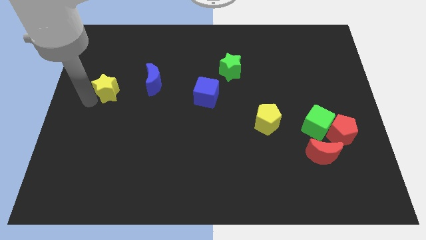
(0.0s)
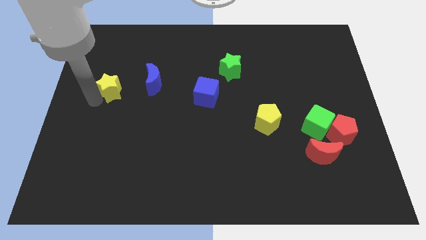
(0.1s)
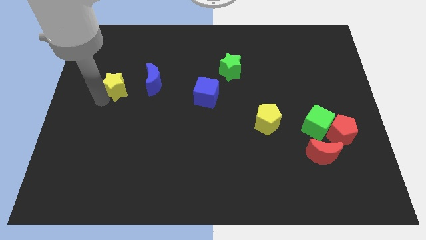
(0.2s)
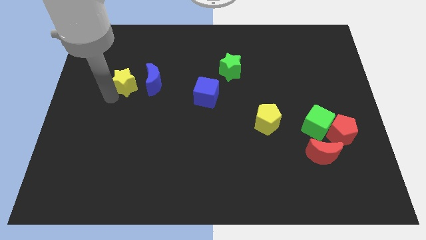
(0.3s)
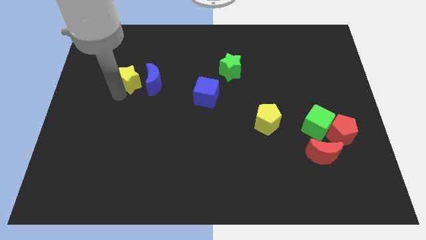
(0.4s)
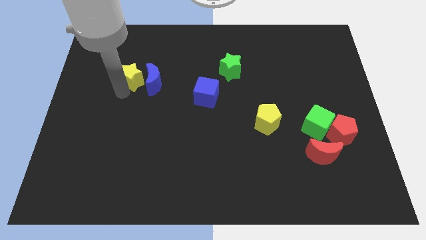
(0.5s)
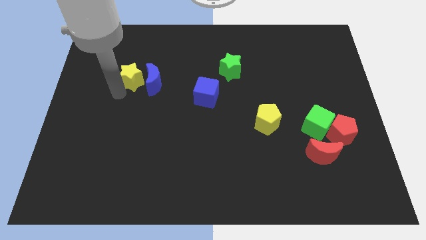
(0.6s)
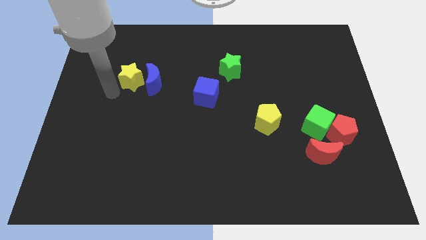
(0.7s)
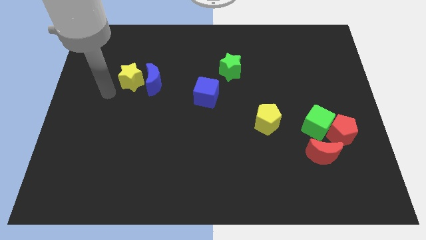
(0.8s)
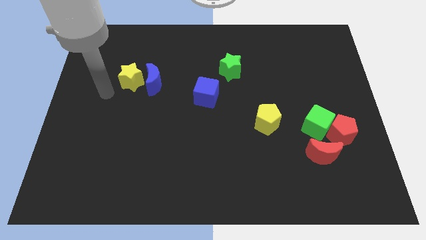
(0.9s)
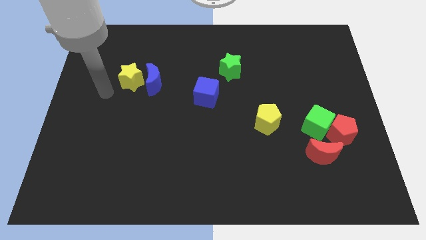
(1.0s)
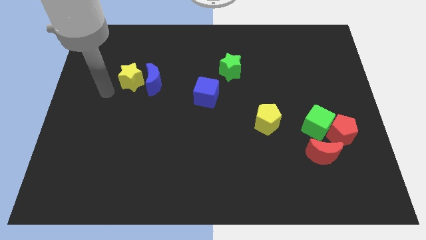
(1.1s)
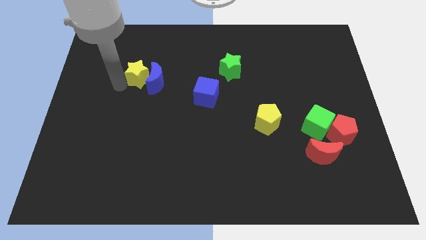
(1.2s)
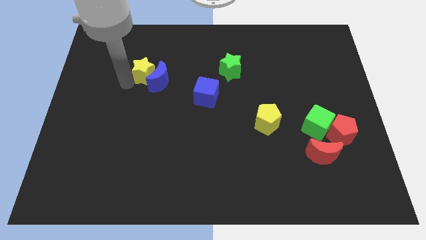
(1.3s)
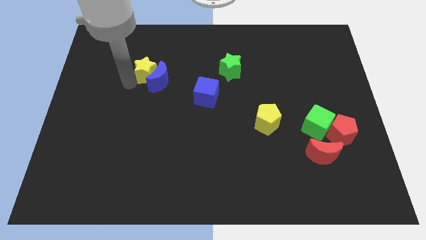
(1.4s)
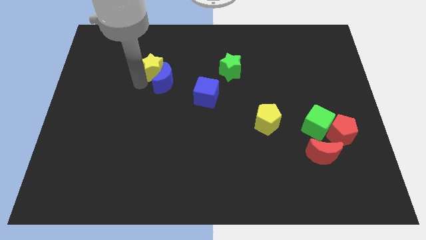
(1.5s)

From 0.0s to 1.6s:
push the yellow star into the blue moon

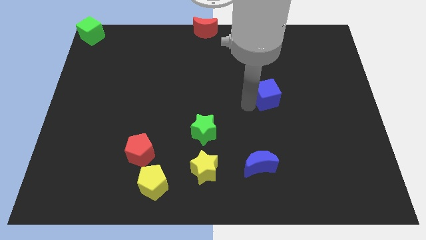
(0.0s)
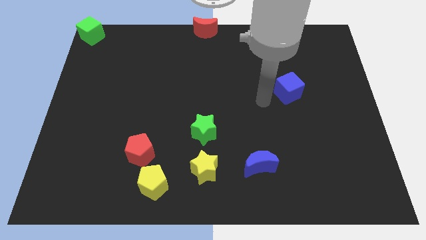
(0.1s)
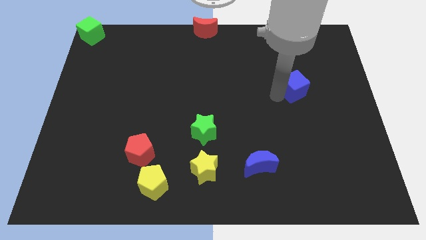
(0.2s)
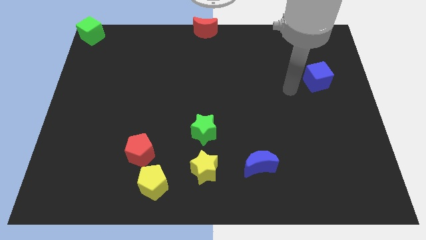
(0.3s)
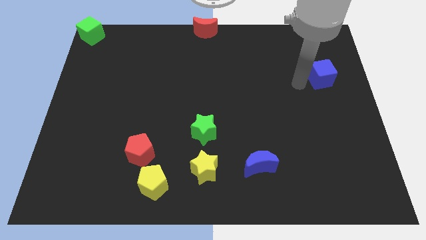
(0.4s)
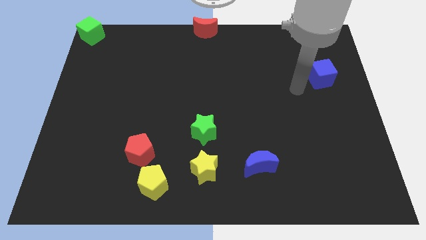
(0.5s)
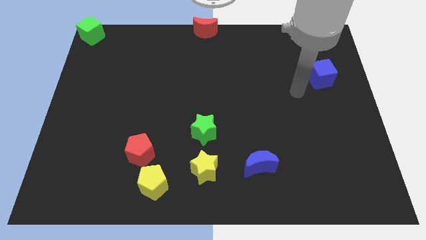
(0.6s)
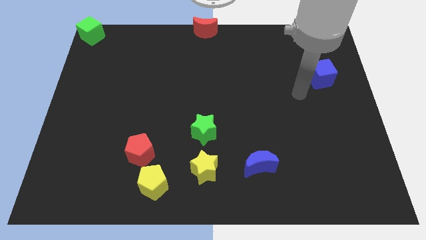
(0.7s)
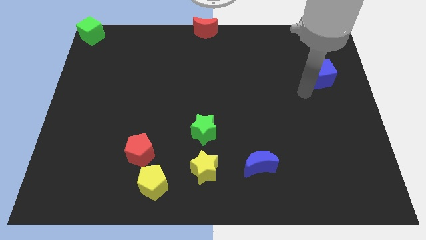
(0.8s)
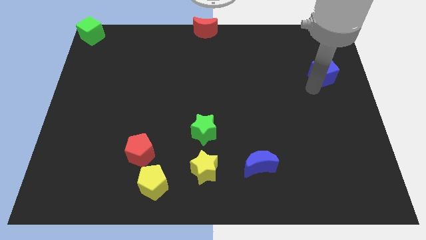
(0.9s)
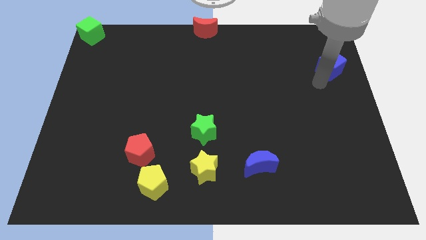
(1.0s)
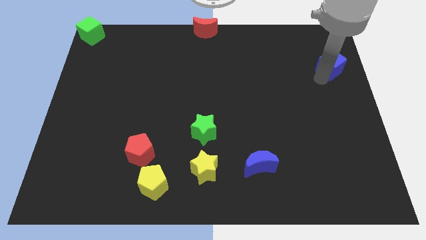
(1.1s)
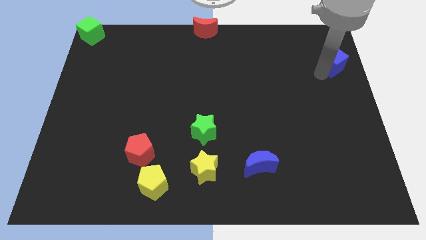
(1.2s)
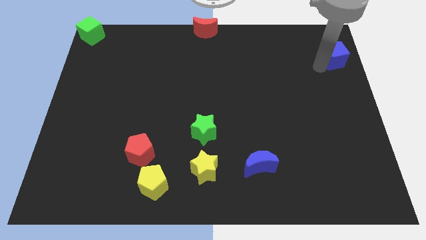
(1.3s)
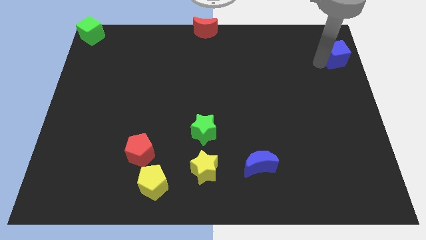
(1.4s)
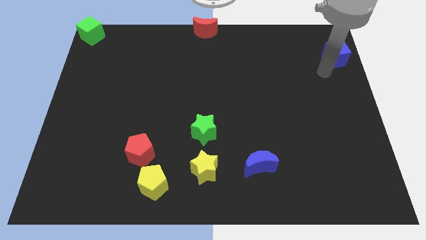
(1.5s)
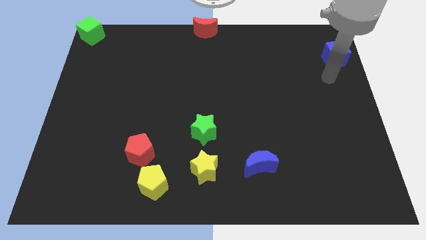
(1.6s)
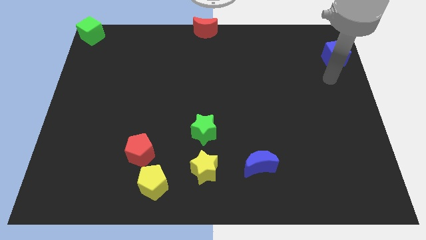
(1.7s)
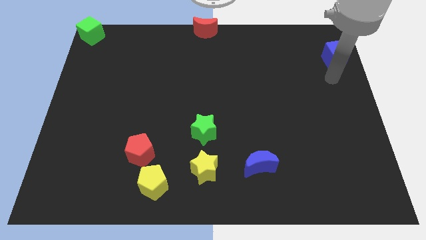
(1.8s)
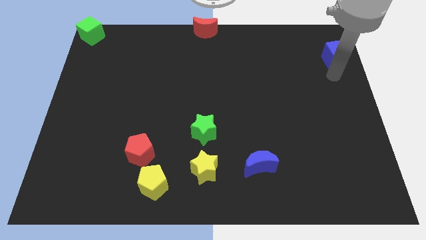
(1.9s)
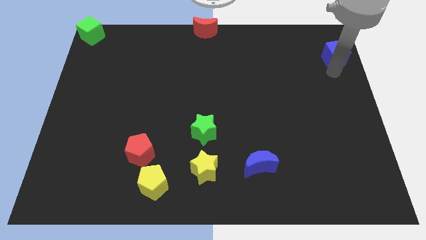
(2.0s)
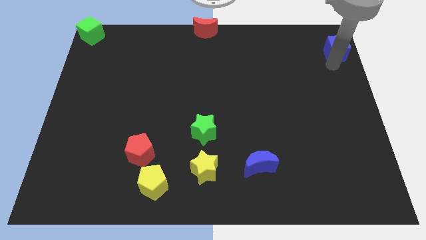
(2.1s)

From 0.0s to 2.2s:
move the blue cube to top right

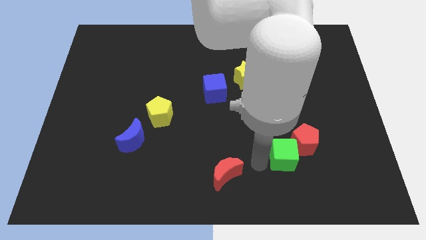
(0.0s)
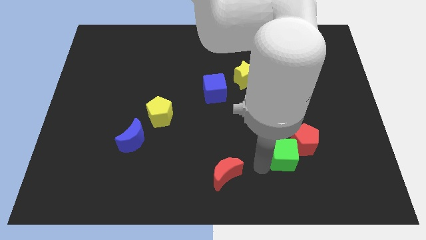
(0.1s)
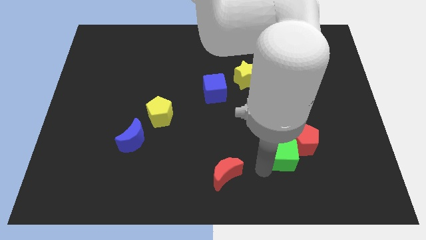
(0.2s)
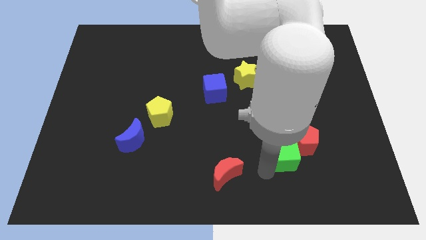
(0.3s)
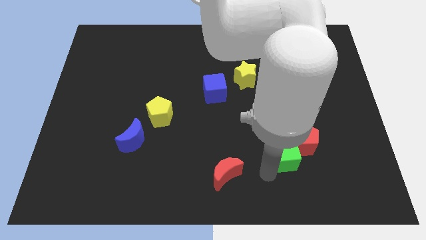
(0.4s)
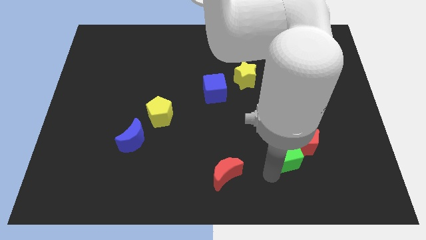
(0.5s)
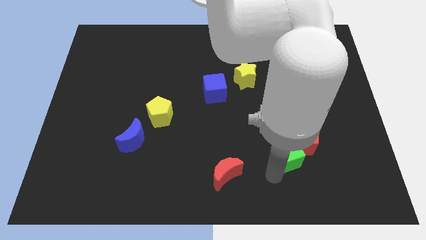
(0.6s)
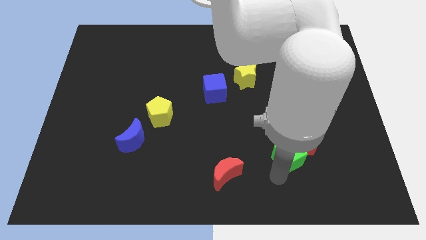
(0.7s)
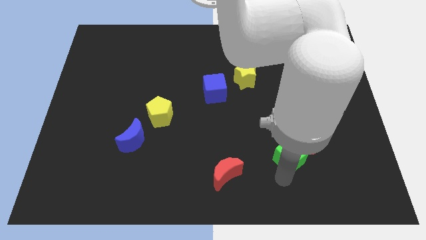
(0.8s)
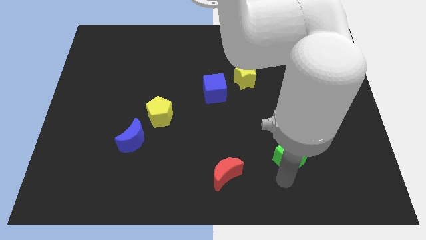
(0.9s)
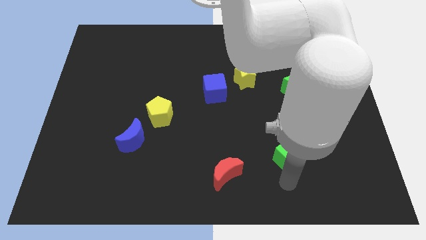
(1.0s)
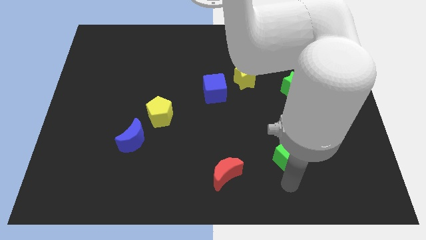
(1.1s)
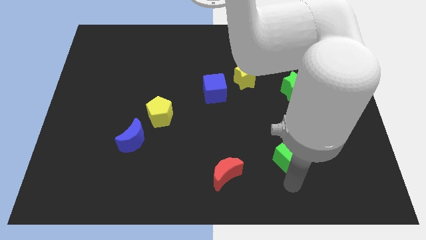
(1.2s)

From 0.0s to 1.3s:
touch the bottom of green cube

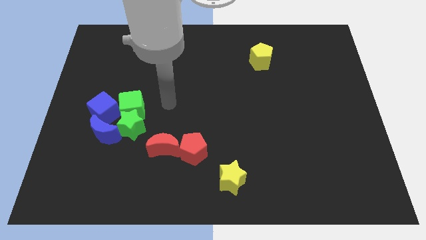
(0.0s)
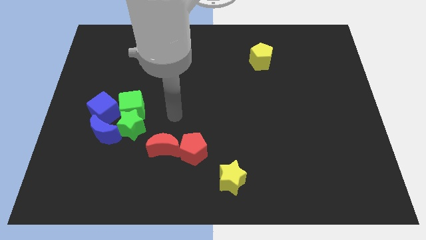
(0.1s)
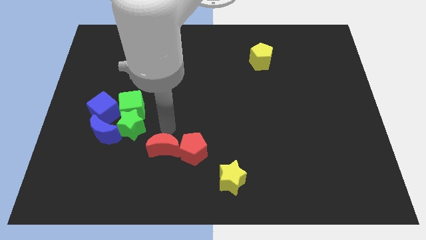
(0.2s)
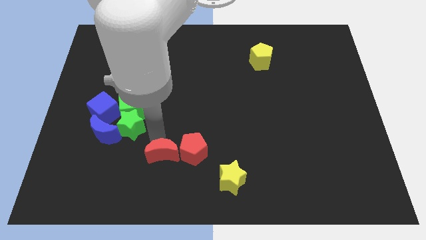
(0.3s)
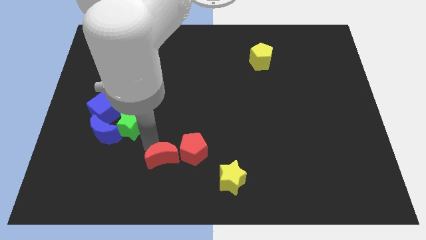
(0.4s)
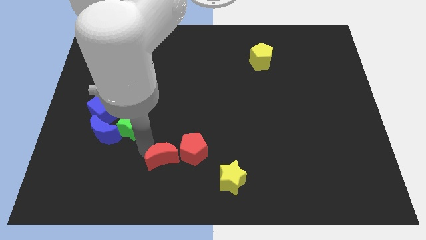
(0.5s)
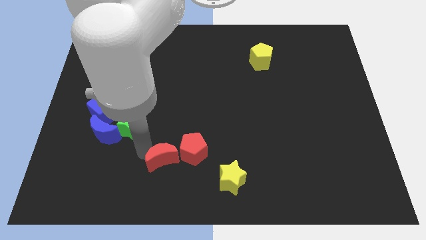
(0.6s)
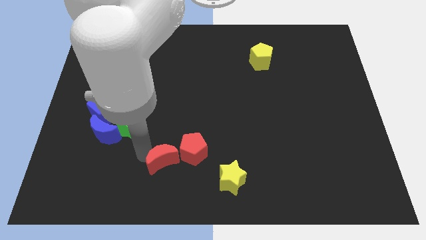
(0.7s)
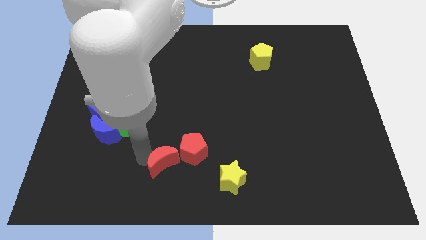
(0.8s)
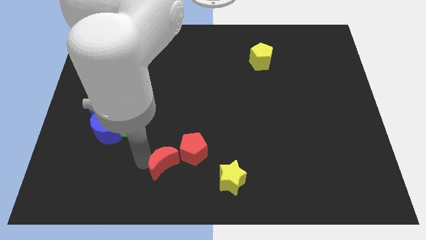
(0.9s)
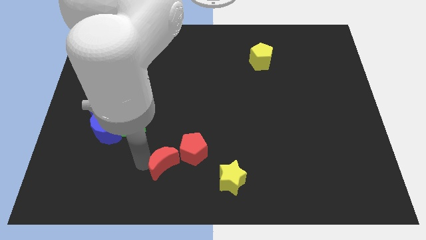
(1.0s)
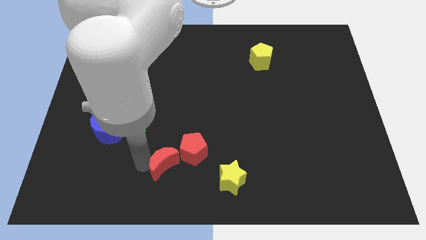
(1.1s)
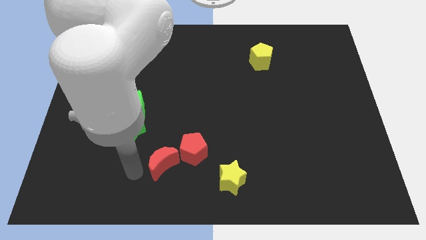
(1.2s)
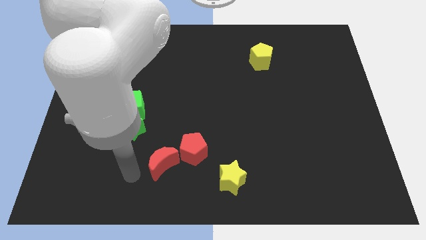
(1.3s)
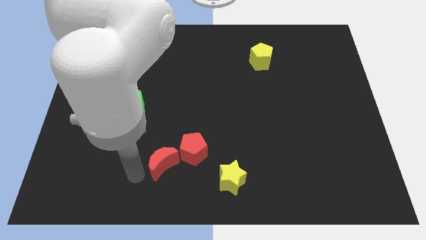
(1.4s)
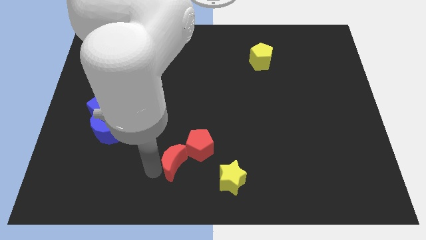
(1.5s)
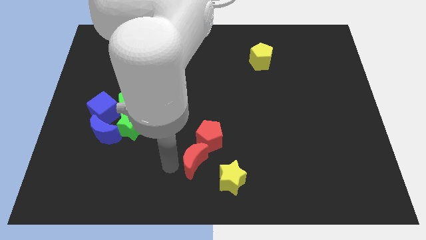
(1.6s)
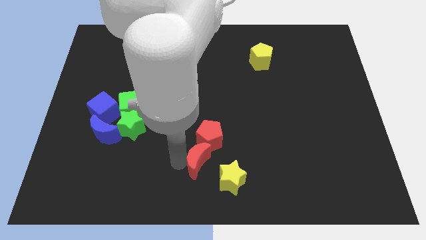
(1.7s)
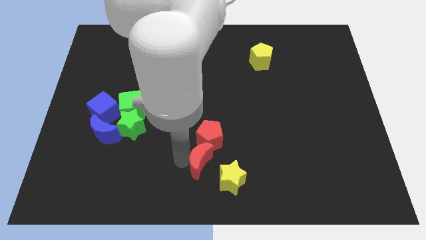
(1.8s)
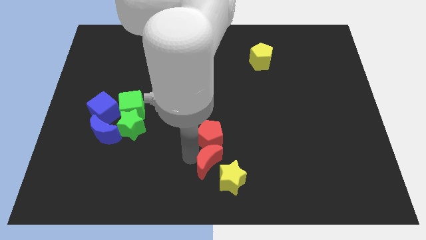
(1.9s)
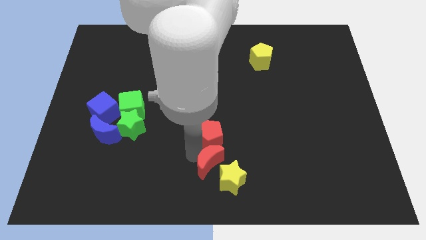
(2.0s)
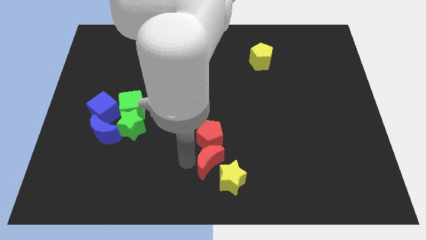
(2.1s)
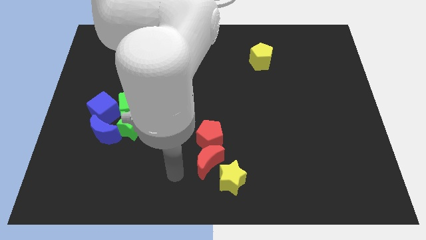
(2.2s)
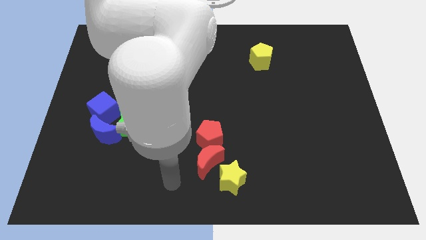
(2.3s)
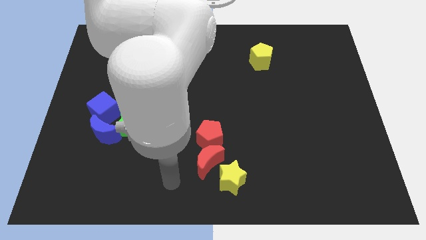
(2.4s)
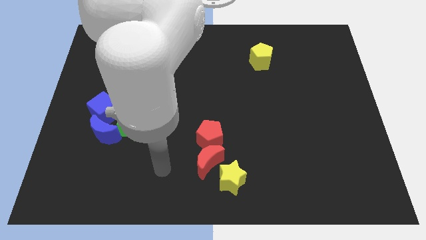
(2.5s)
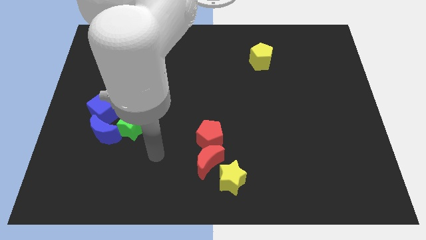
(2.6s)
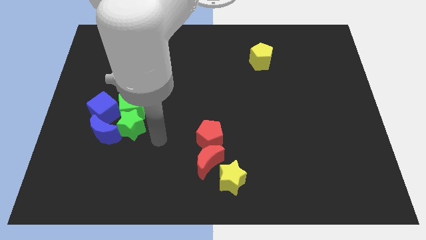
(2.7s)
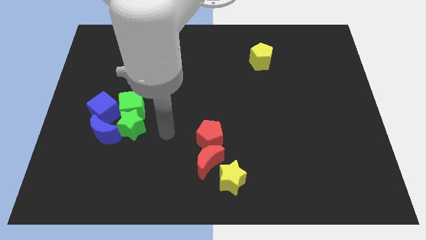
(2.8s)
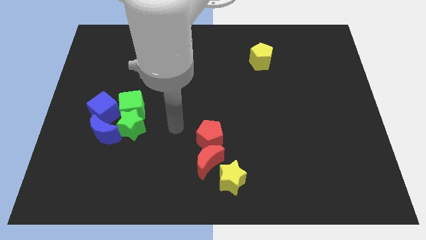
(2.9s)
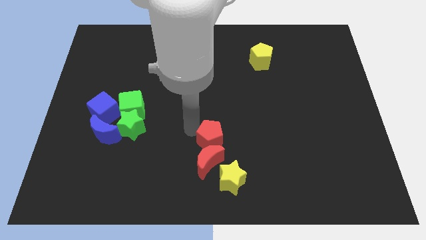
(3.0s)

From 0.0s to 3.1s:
move the red moon below the red pentagon

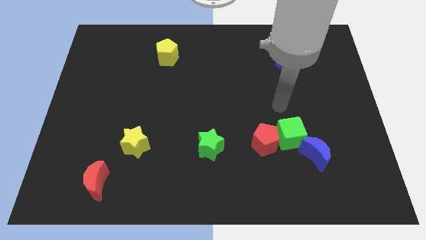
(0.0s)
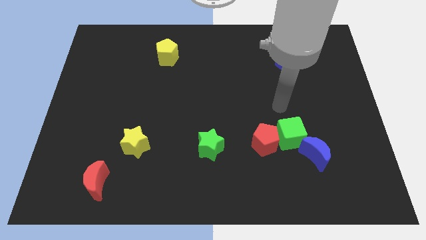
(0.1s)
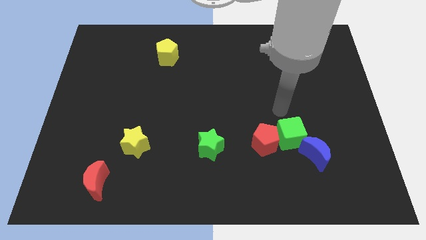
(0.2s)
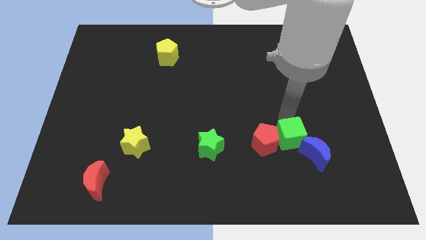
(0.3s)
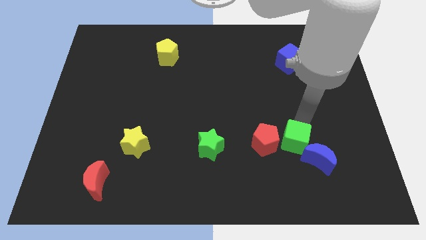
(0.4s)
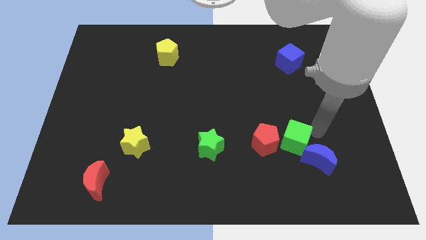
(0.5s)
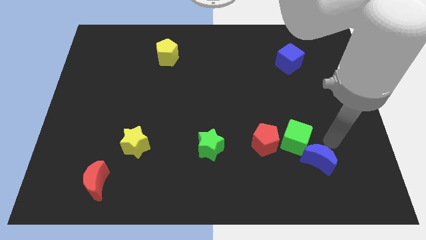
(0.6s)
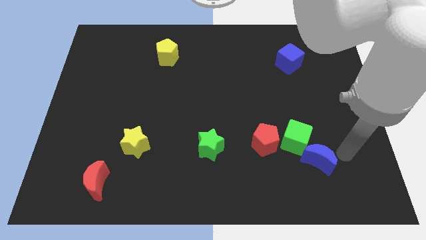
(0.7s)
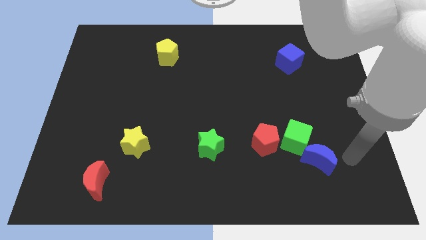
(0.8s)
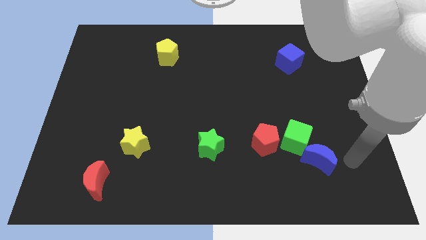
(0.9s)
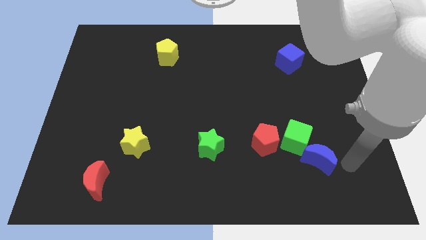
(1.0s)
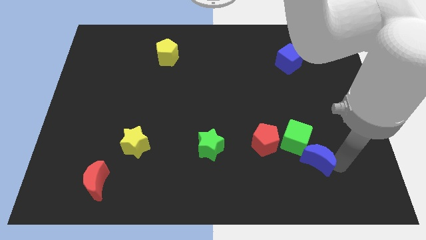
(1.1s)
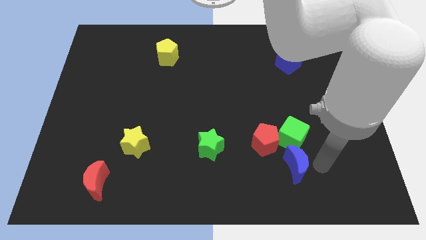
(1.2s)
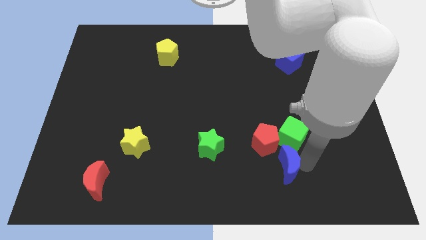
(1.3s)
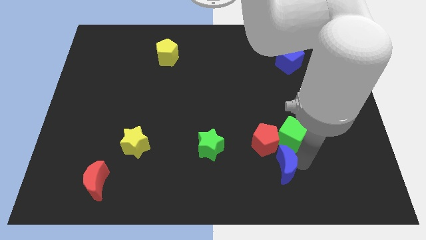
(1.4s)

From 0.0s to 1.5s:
move your arm close to the blue moon
